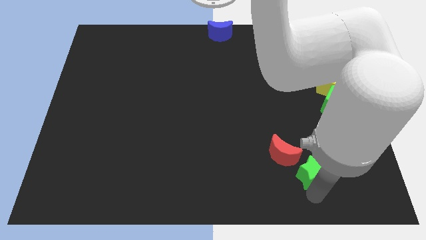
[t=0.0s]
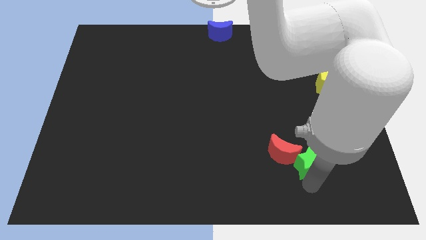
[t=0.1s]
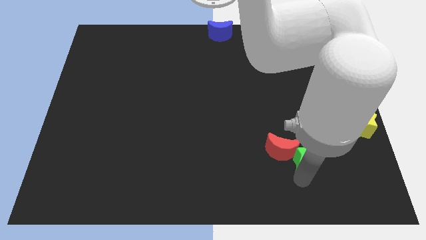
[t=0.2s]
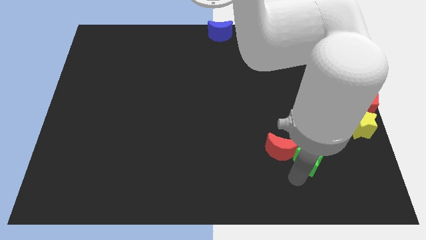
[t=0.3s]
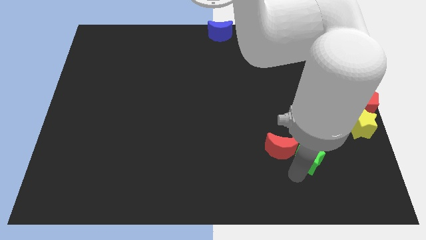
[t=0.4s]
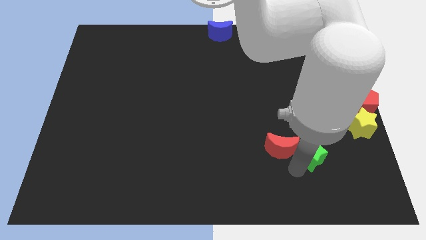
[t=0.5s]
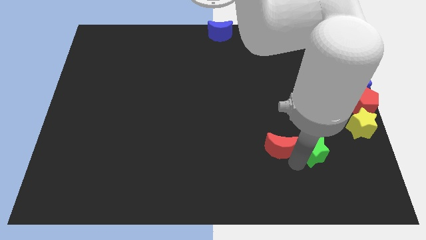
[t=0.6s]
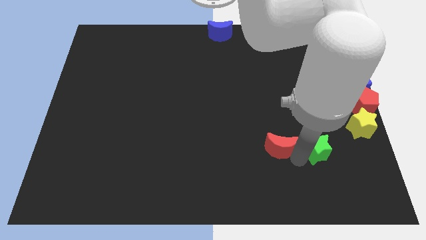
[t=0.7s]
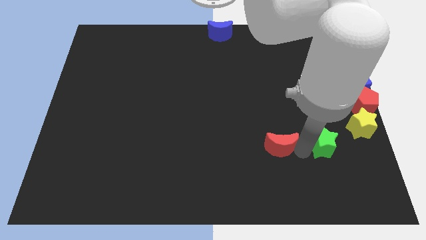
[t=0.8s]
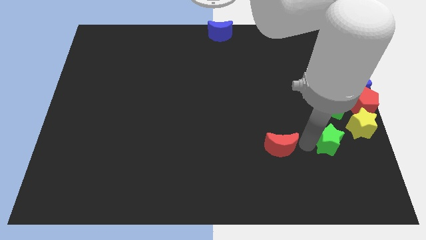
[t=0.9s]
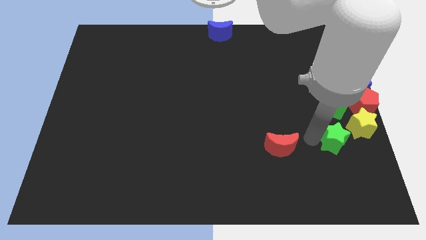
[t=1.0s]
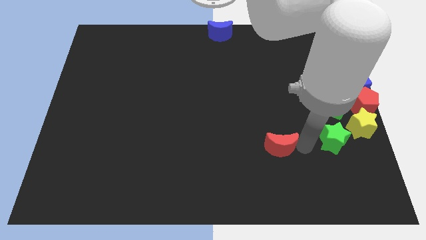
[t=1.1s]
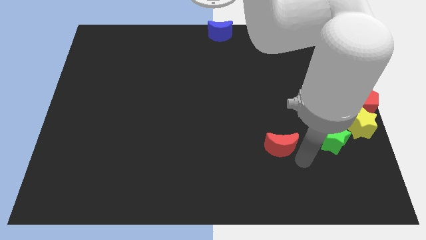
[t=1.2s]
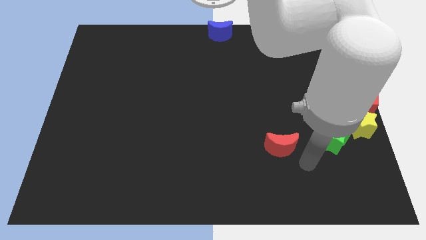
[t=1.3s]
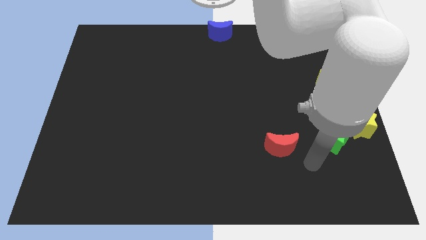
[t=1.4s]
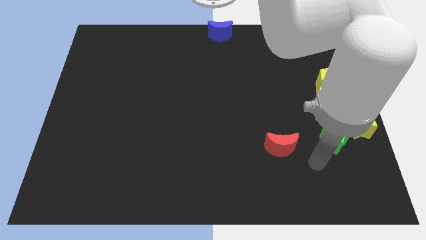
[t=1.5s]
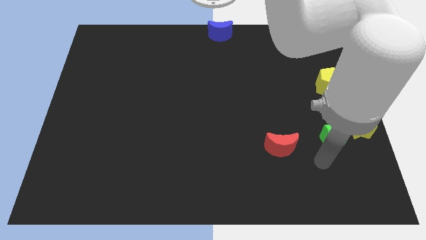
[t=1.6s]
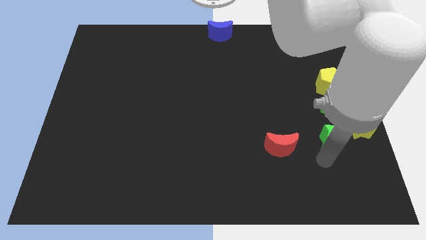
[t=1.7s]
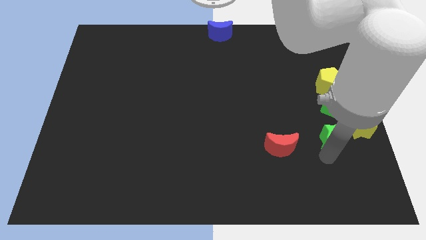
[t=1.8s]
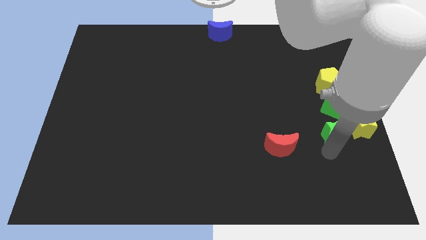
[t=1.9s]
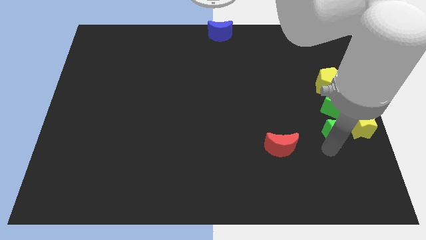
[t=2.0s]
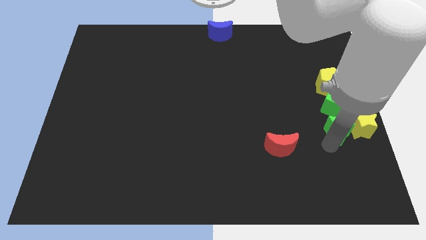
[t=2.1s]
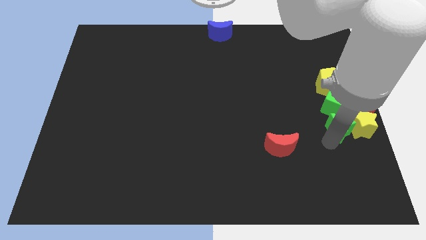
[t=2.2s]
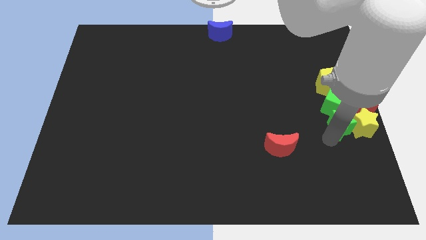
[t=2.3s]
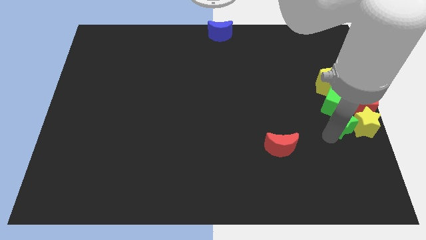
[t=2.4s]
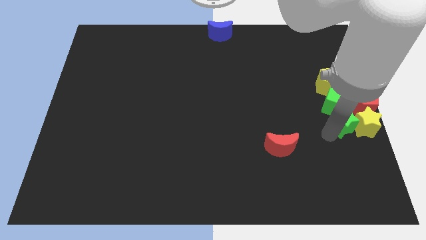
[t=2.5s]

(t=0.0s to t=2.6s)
place green star below green cube

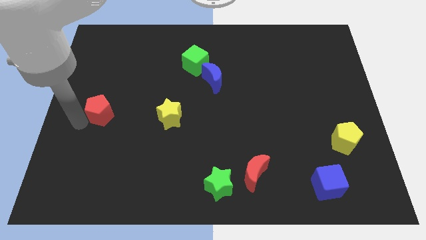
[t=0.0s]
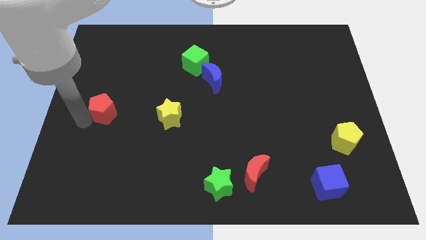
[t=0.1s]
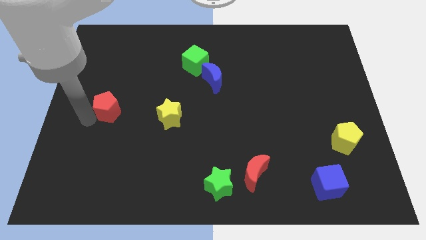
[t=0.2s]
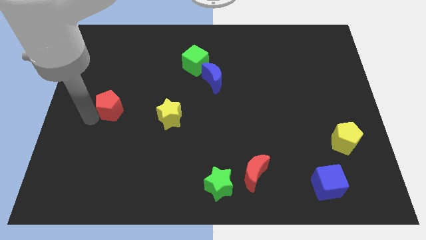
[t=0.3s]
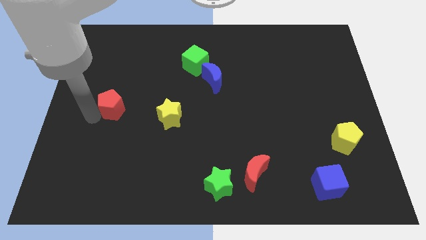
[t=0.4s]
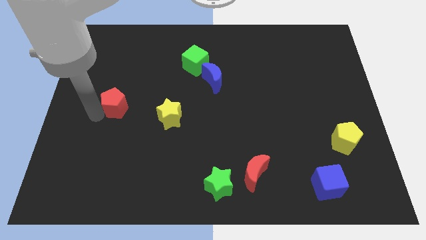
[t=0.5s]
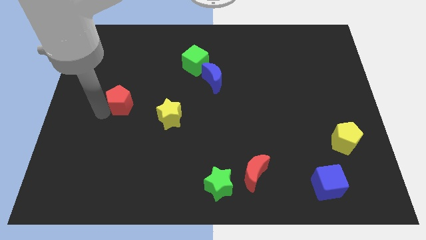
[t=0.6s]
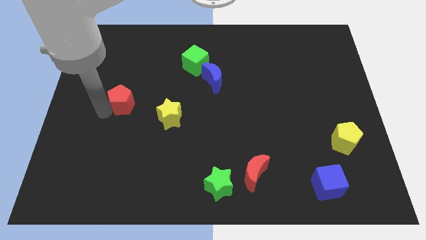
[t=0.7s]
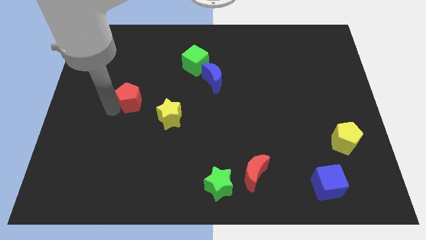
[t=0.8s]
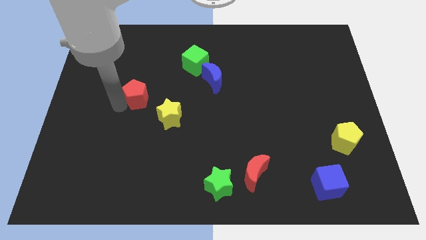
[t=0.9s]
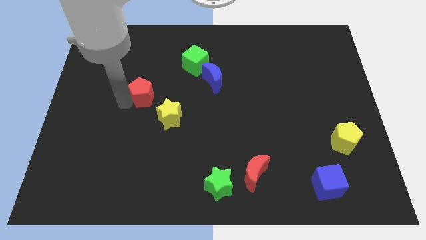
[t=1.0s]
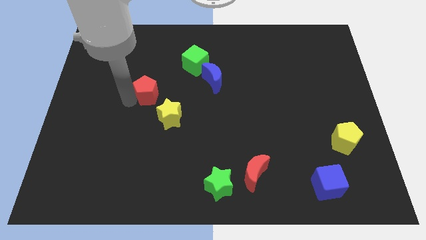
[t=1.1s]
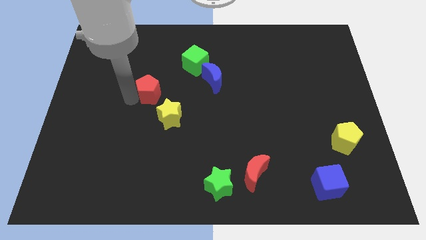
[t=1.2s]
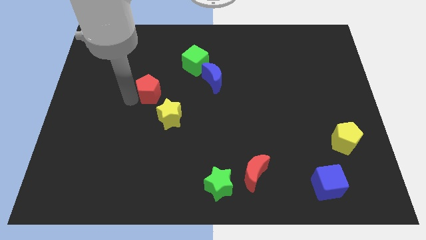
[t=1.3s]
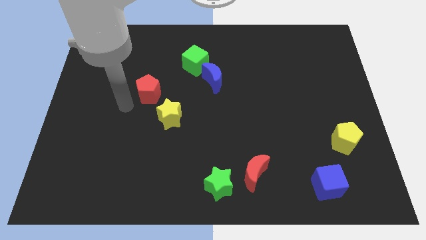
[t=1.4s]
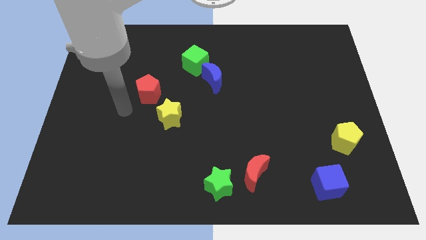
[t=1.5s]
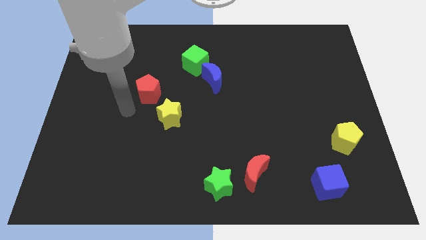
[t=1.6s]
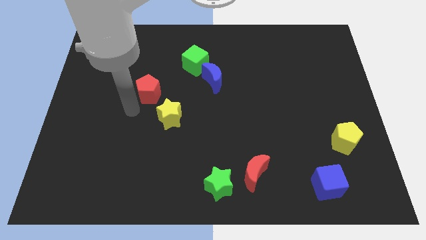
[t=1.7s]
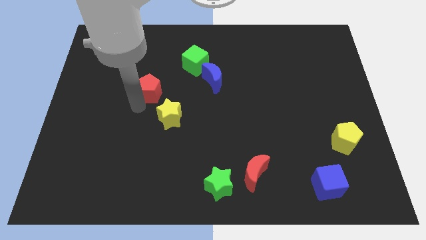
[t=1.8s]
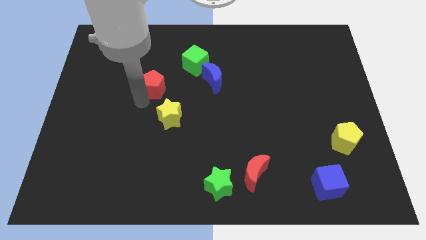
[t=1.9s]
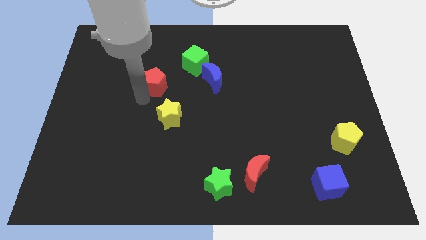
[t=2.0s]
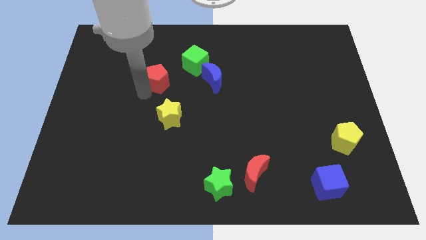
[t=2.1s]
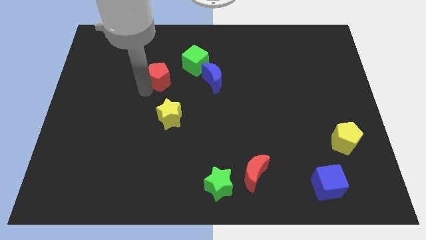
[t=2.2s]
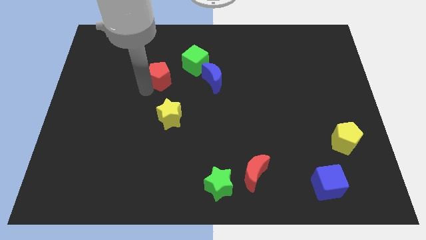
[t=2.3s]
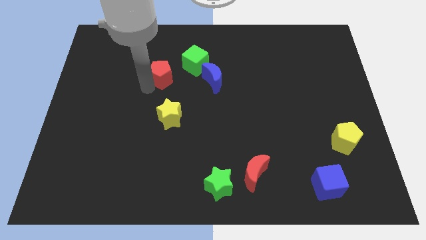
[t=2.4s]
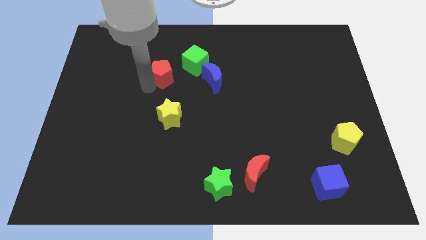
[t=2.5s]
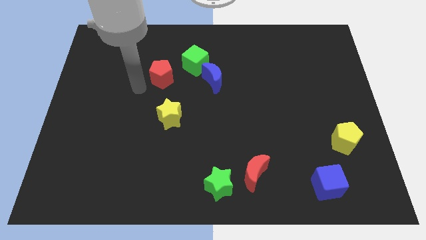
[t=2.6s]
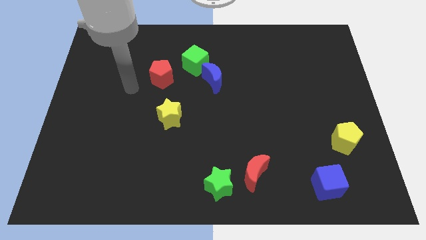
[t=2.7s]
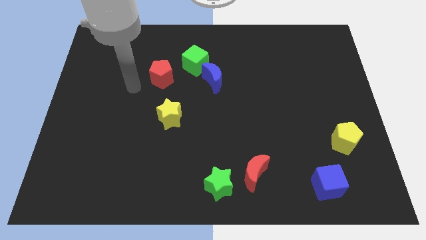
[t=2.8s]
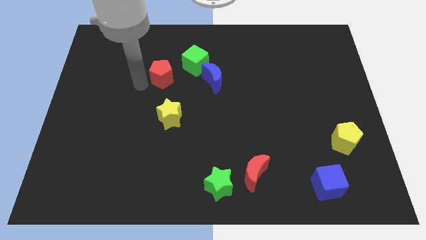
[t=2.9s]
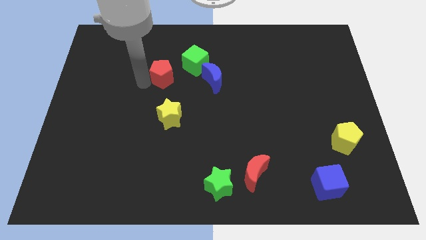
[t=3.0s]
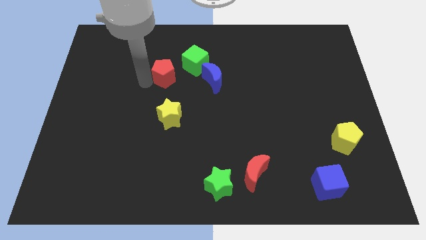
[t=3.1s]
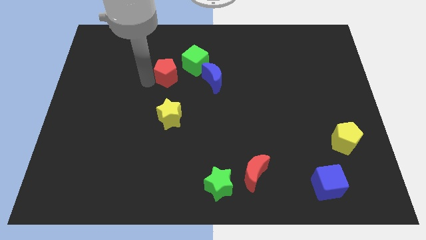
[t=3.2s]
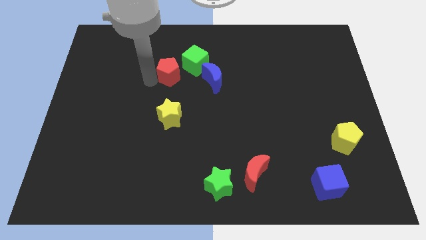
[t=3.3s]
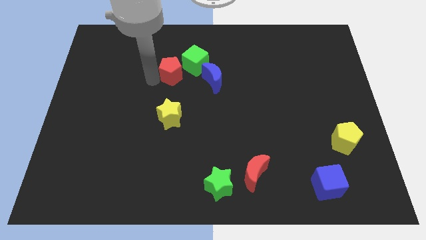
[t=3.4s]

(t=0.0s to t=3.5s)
place red pentagon vertically above yellow star

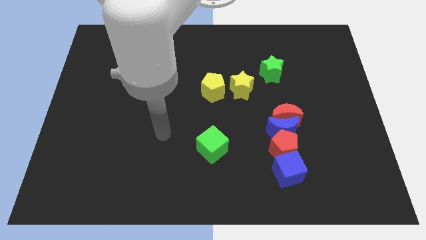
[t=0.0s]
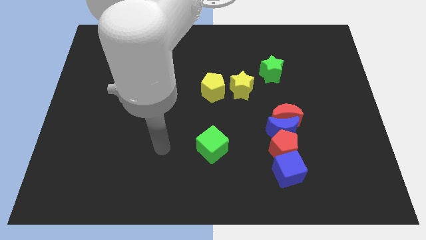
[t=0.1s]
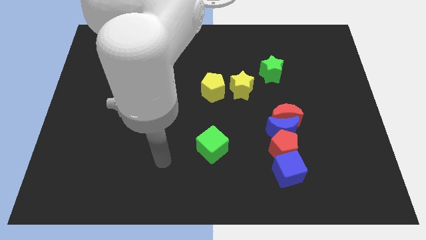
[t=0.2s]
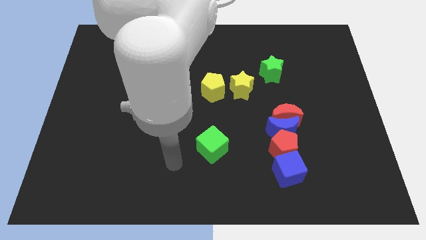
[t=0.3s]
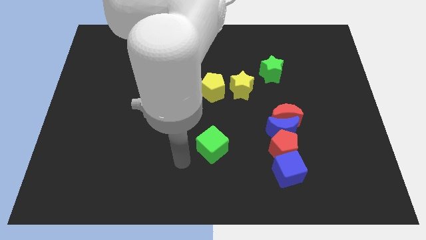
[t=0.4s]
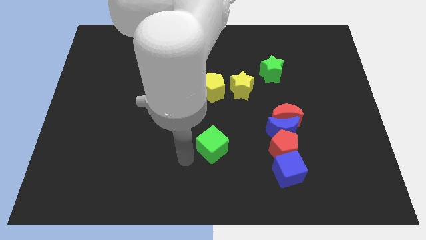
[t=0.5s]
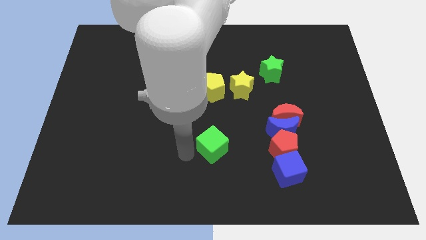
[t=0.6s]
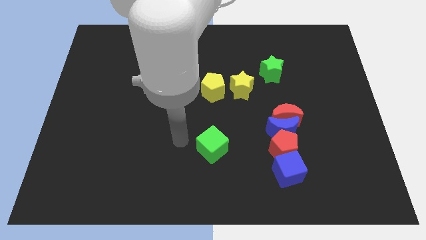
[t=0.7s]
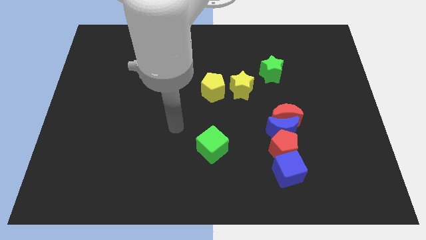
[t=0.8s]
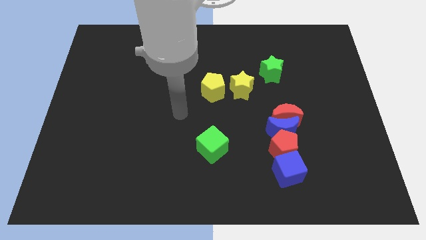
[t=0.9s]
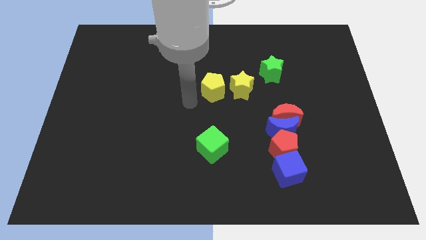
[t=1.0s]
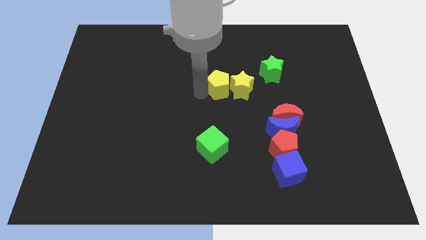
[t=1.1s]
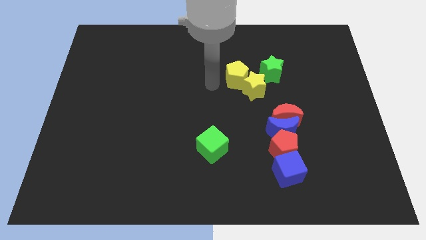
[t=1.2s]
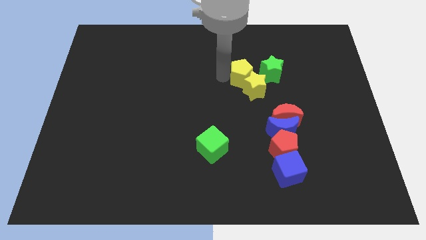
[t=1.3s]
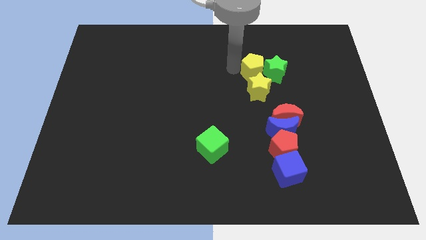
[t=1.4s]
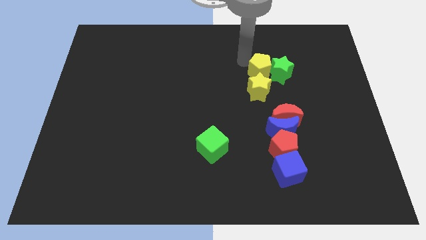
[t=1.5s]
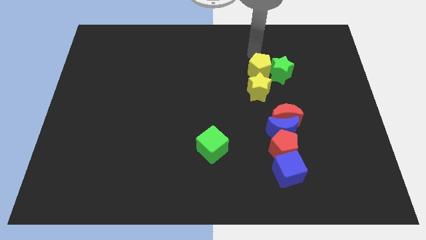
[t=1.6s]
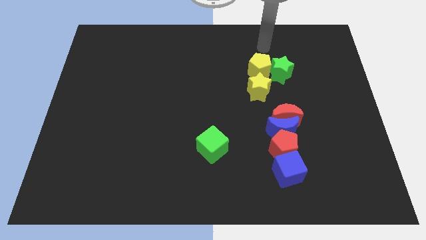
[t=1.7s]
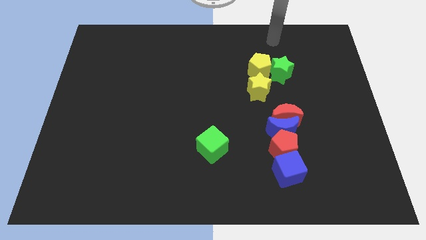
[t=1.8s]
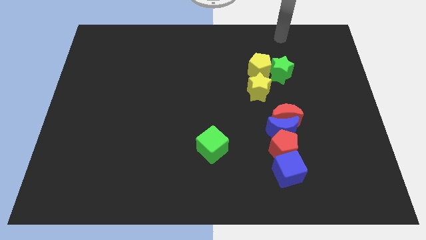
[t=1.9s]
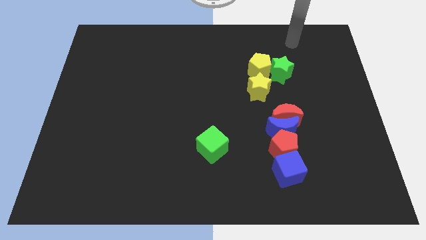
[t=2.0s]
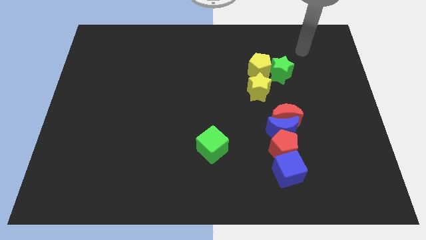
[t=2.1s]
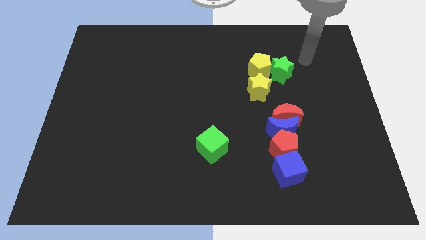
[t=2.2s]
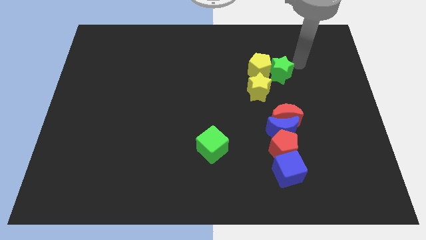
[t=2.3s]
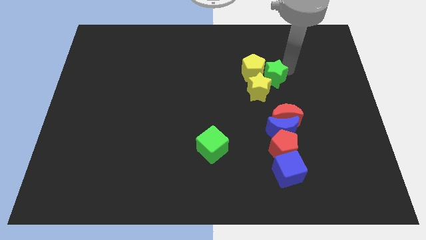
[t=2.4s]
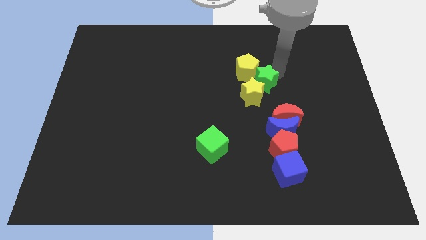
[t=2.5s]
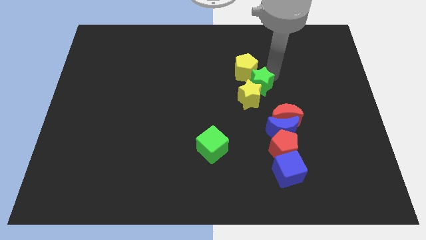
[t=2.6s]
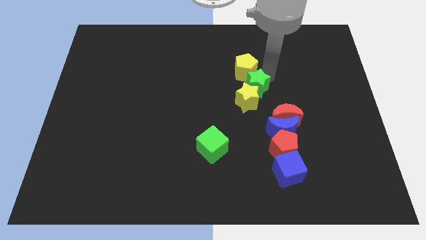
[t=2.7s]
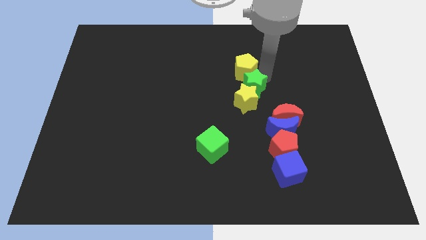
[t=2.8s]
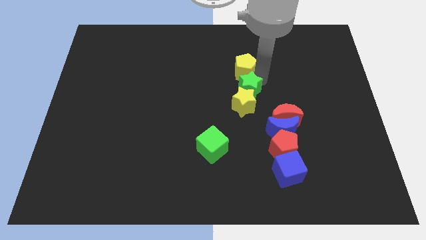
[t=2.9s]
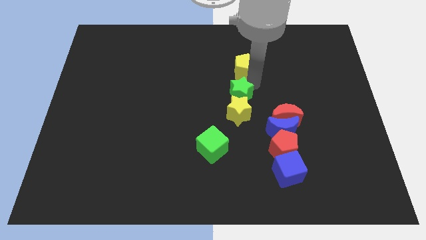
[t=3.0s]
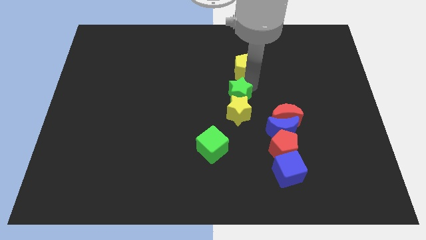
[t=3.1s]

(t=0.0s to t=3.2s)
place green star below yellow pentagon
